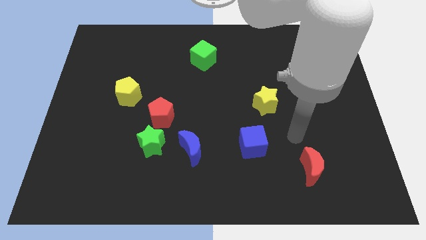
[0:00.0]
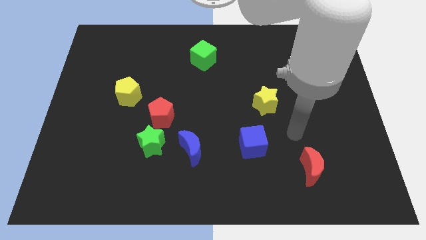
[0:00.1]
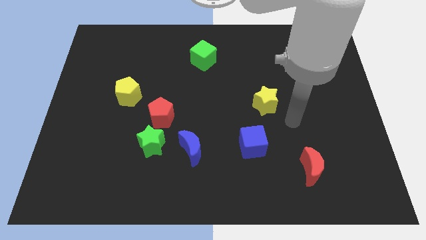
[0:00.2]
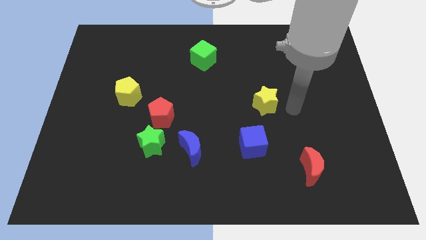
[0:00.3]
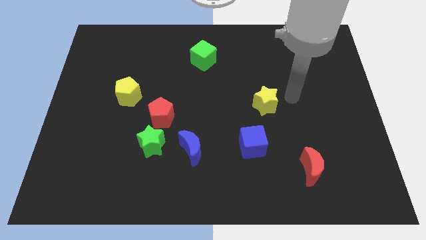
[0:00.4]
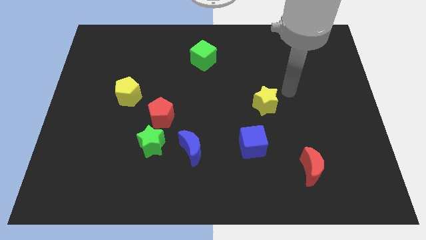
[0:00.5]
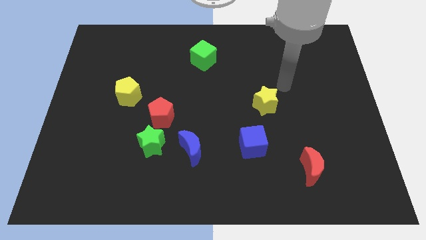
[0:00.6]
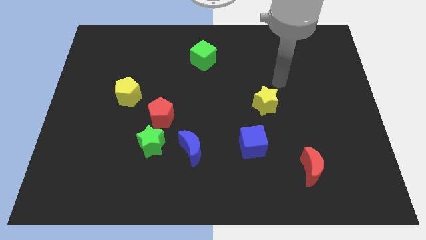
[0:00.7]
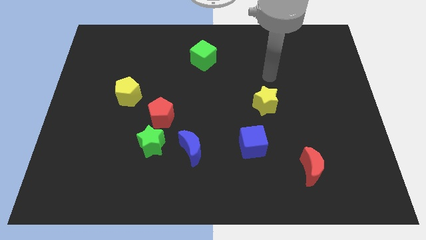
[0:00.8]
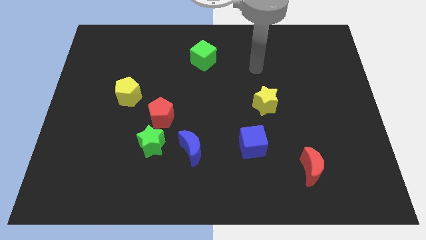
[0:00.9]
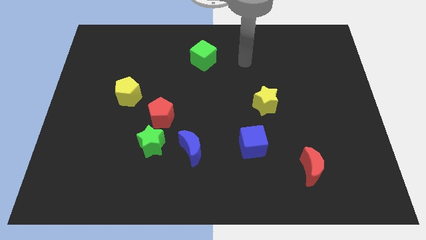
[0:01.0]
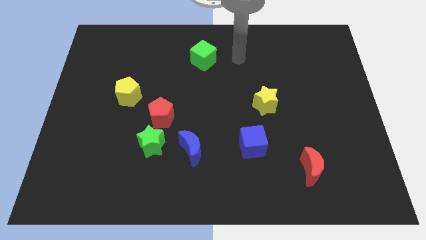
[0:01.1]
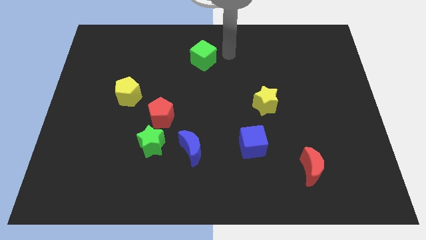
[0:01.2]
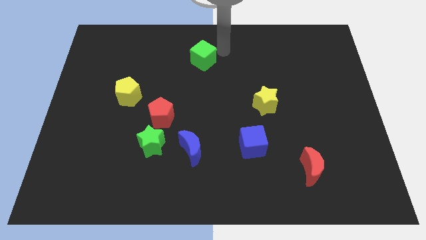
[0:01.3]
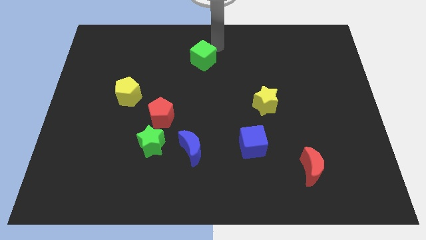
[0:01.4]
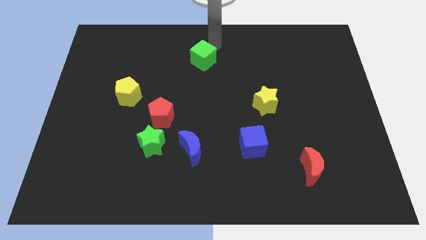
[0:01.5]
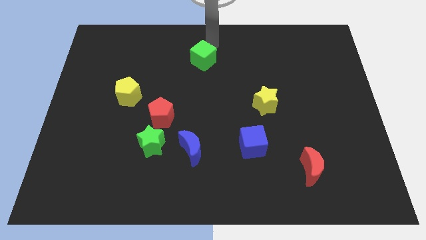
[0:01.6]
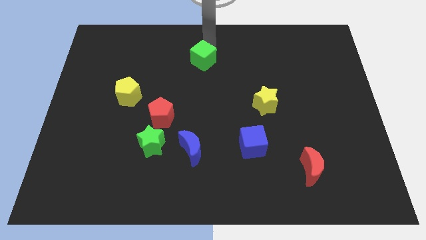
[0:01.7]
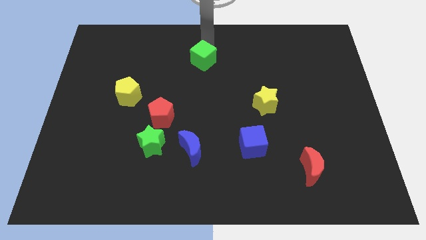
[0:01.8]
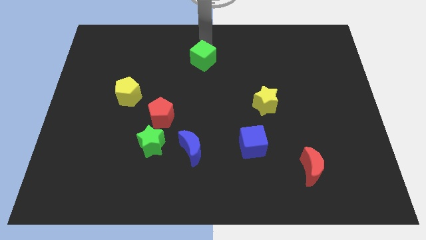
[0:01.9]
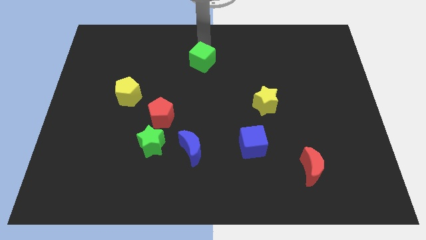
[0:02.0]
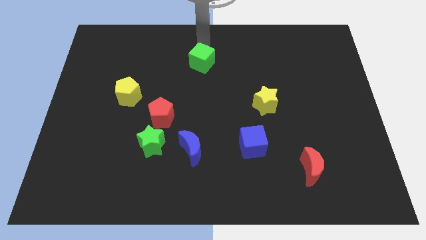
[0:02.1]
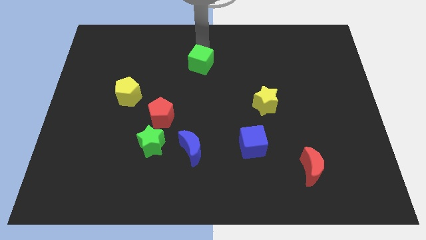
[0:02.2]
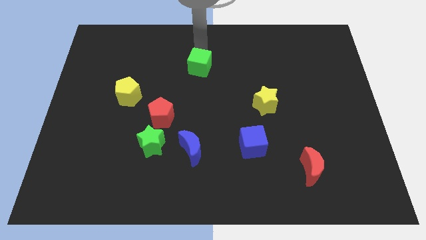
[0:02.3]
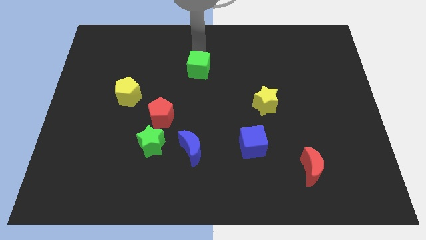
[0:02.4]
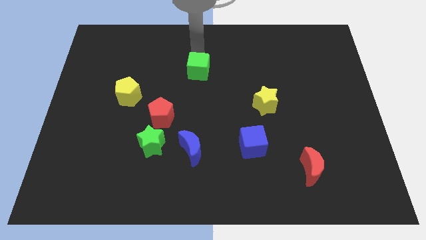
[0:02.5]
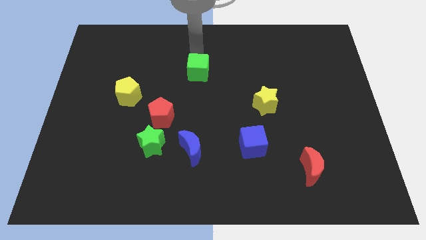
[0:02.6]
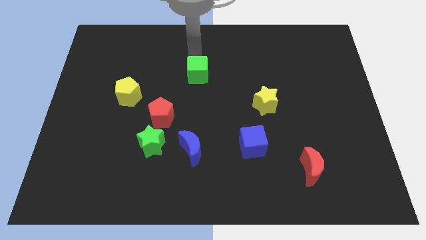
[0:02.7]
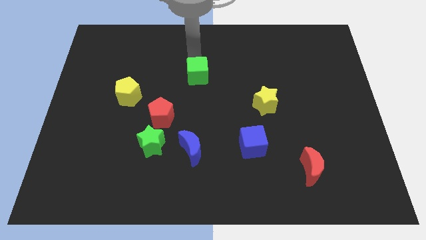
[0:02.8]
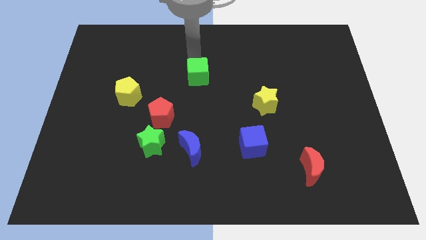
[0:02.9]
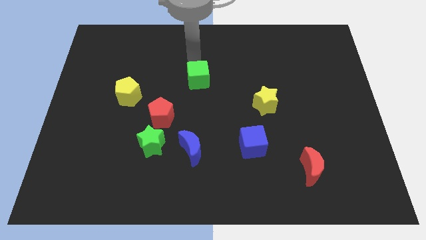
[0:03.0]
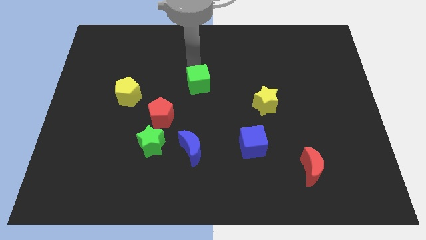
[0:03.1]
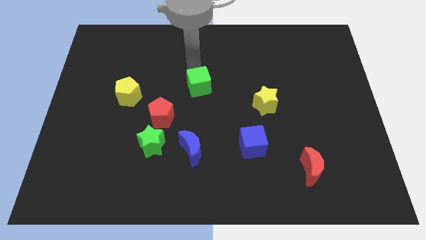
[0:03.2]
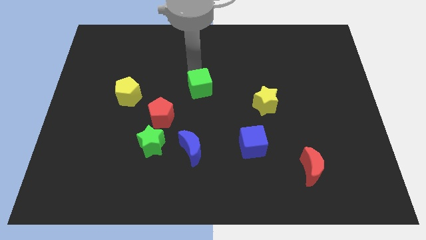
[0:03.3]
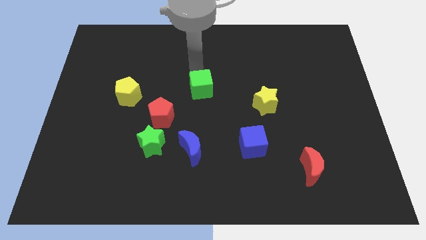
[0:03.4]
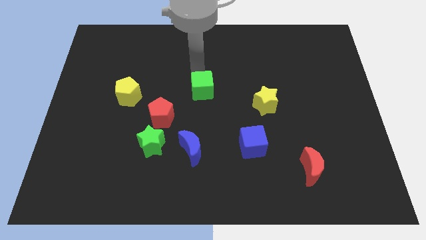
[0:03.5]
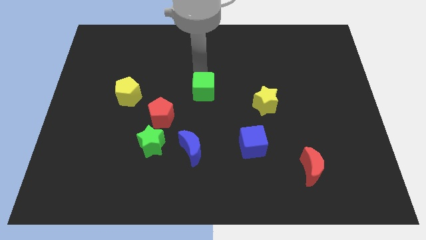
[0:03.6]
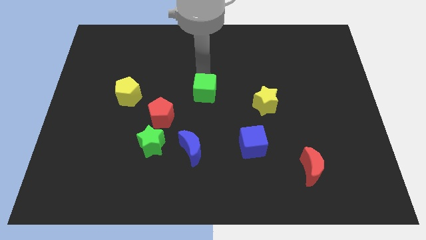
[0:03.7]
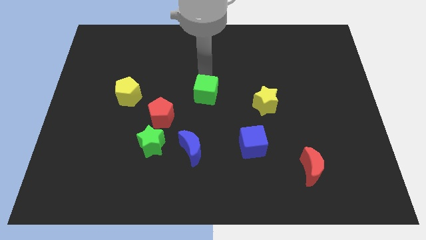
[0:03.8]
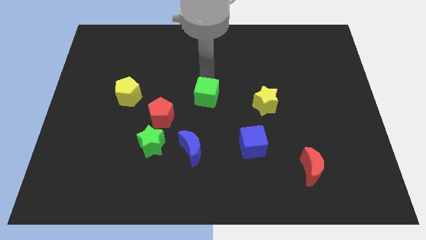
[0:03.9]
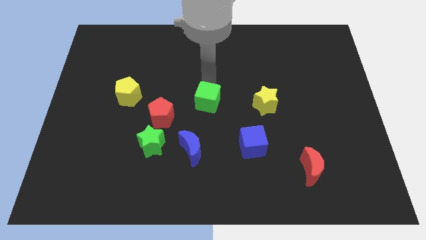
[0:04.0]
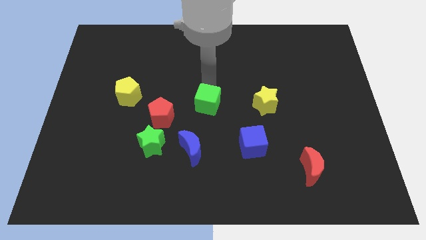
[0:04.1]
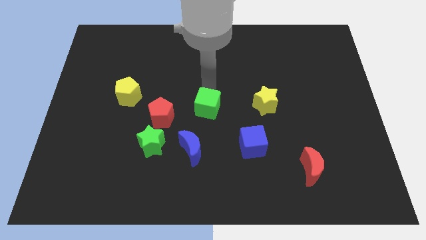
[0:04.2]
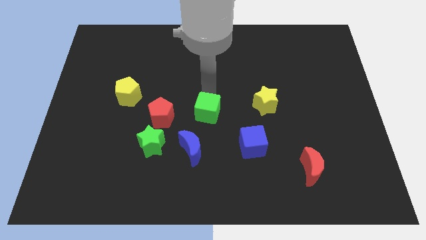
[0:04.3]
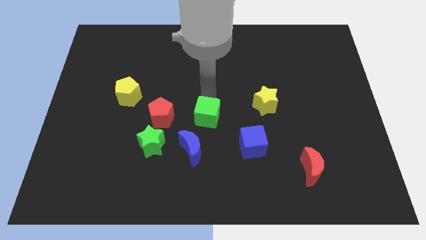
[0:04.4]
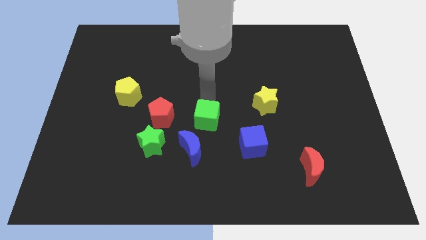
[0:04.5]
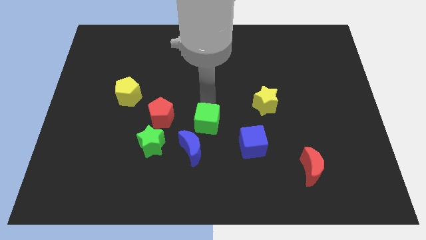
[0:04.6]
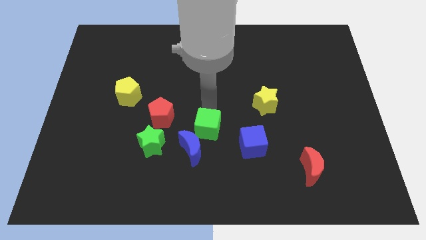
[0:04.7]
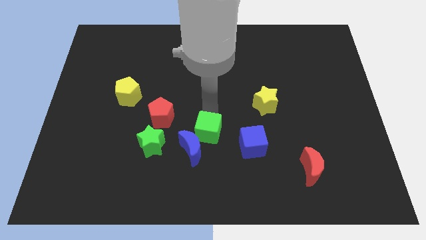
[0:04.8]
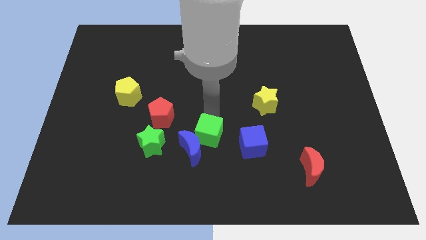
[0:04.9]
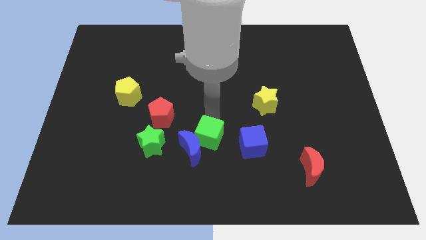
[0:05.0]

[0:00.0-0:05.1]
put the green cube to the blue moon

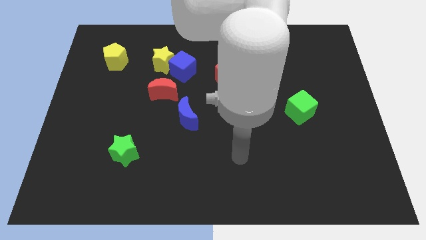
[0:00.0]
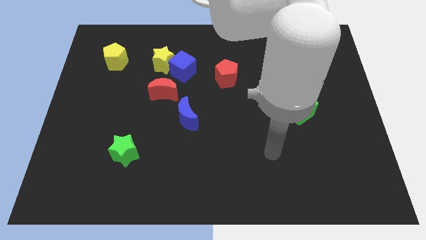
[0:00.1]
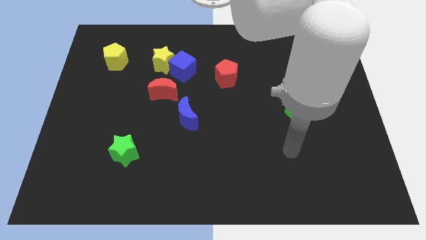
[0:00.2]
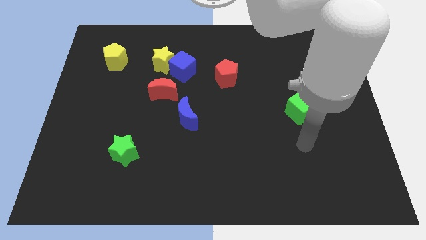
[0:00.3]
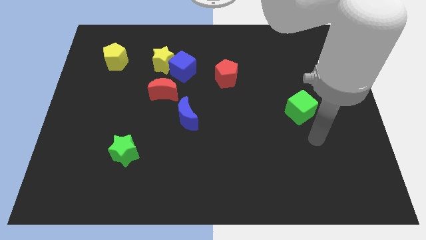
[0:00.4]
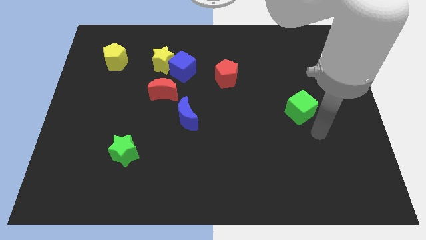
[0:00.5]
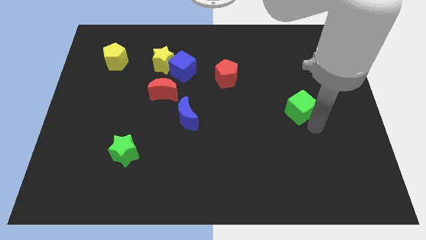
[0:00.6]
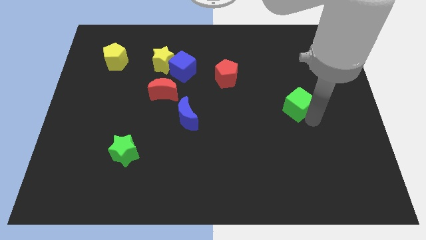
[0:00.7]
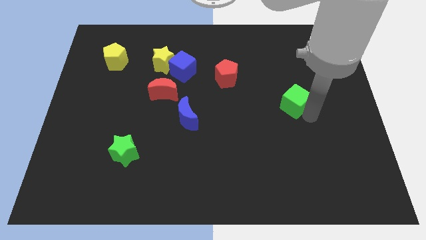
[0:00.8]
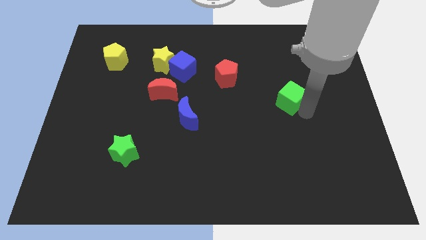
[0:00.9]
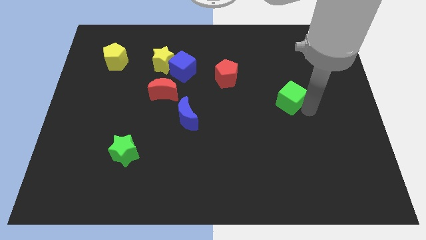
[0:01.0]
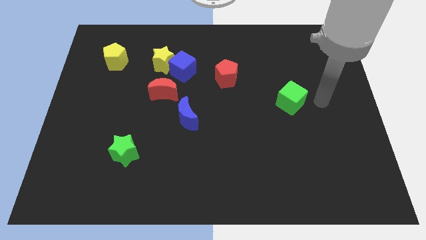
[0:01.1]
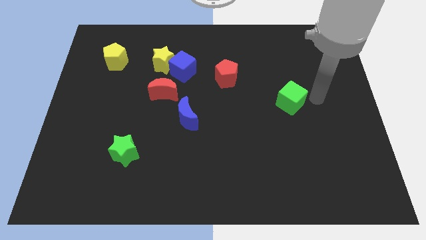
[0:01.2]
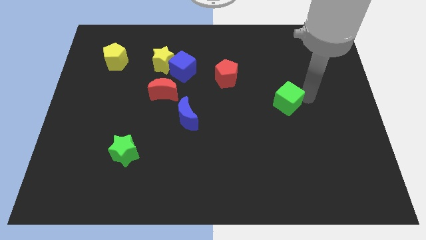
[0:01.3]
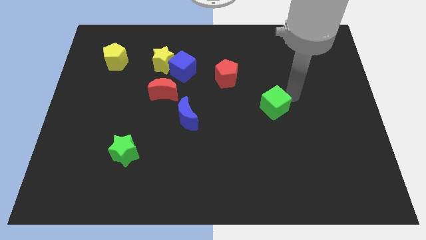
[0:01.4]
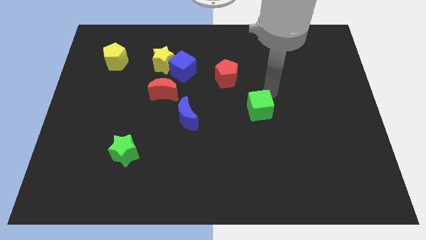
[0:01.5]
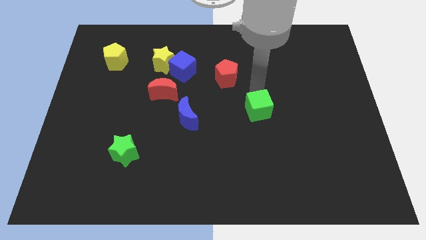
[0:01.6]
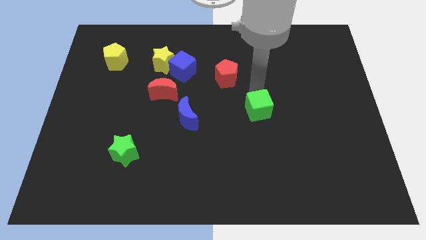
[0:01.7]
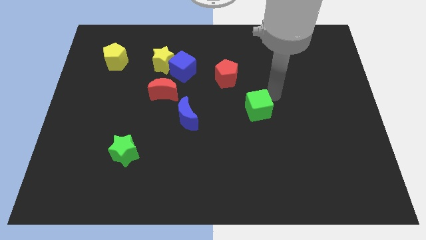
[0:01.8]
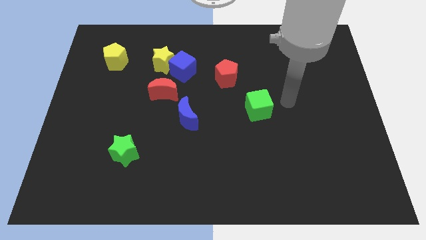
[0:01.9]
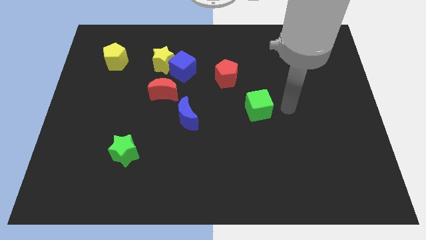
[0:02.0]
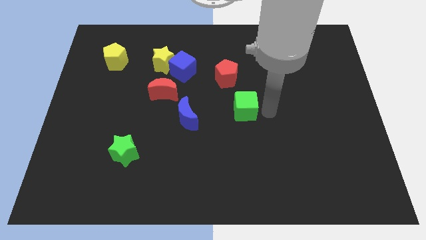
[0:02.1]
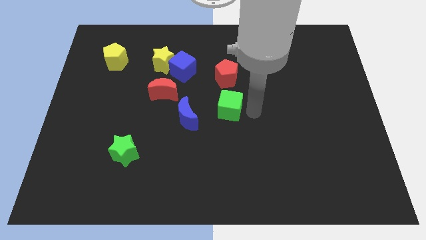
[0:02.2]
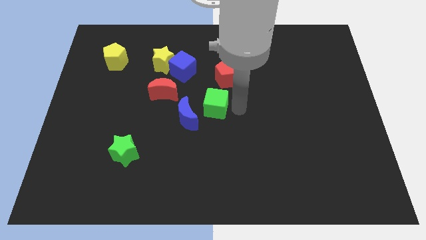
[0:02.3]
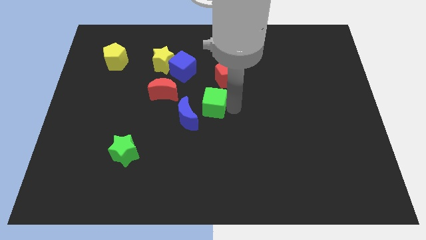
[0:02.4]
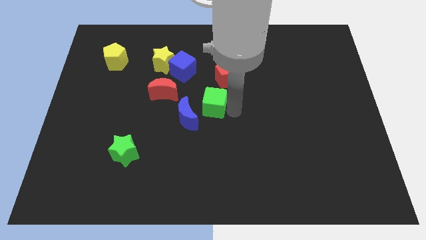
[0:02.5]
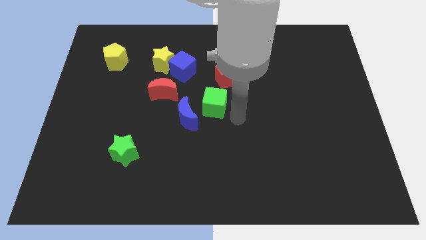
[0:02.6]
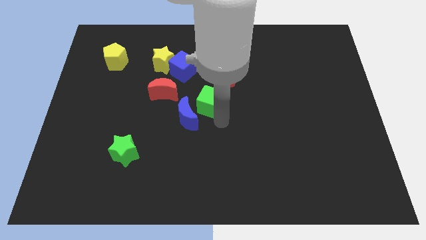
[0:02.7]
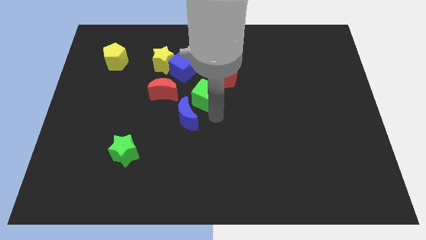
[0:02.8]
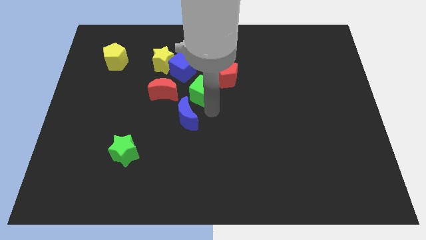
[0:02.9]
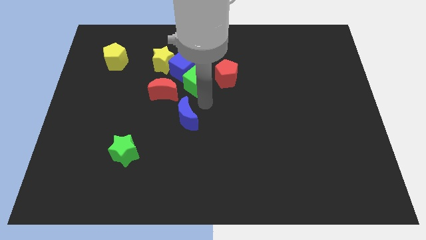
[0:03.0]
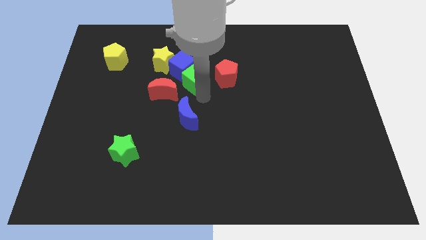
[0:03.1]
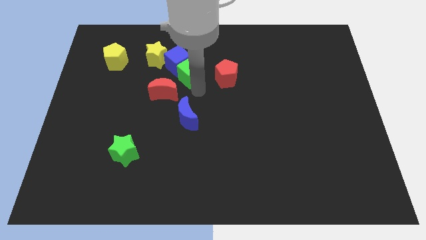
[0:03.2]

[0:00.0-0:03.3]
move the green cube to the blue cube
